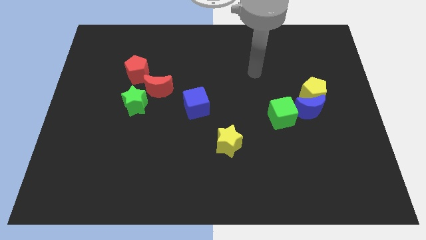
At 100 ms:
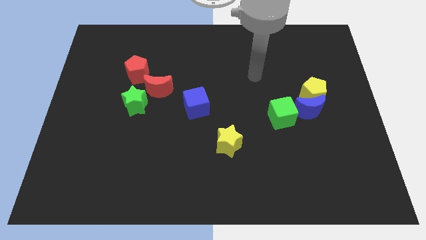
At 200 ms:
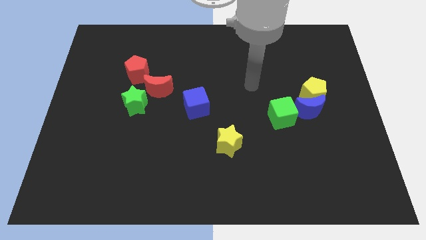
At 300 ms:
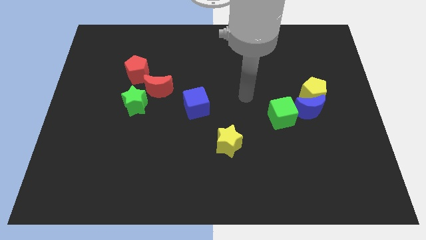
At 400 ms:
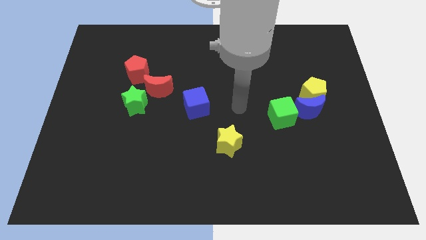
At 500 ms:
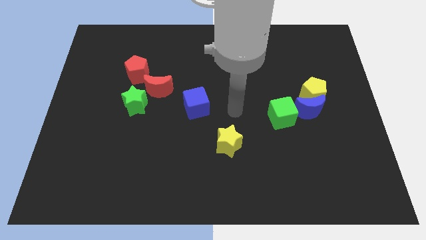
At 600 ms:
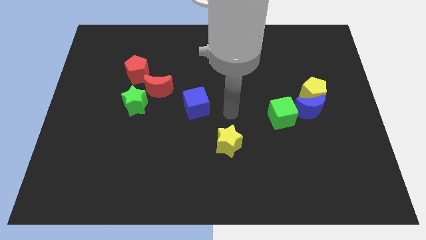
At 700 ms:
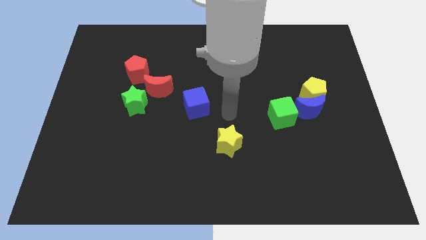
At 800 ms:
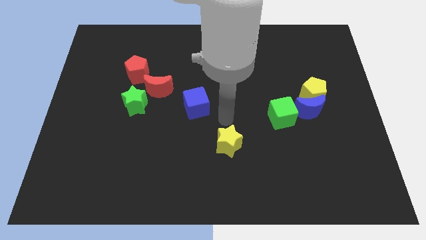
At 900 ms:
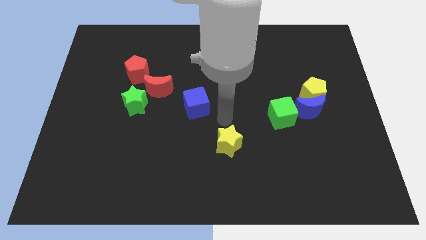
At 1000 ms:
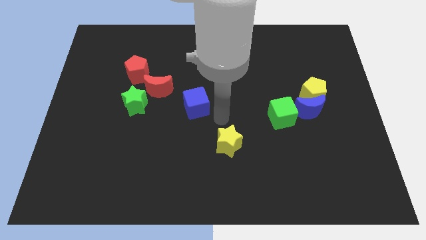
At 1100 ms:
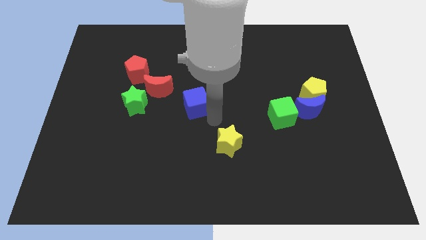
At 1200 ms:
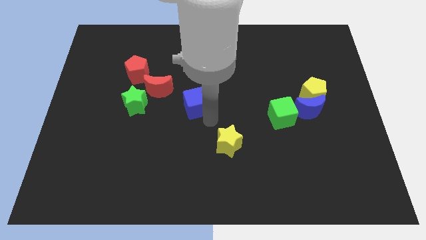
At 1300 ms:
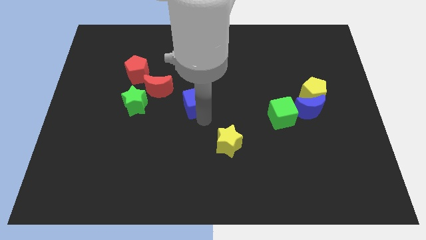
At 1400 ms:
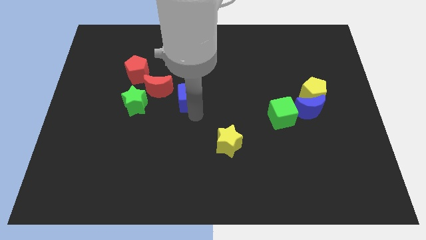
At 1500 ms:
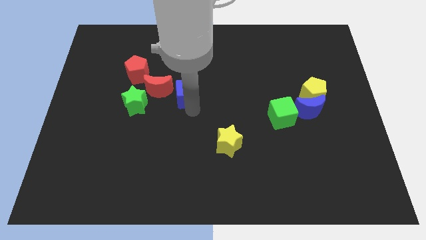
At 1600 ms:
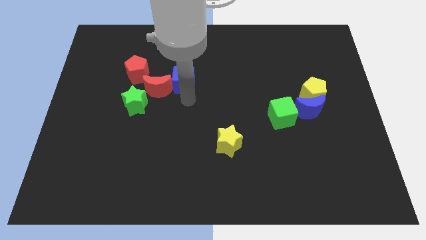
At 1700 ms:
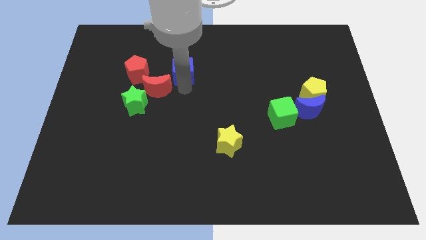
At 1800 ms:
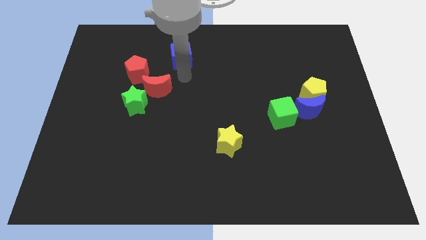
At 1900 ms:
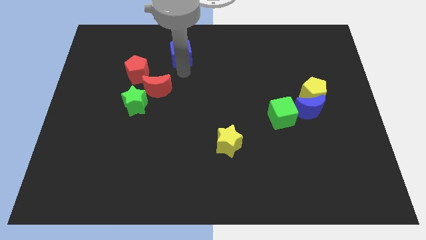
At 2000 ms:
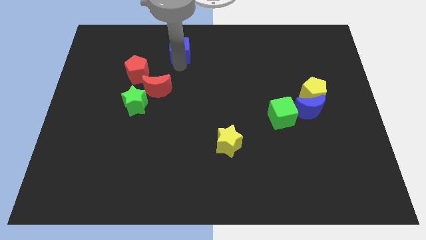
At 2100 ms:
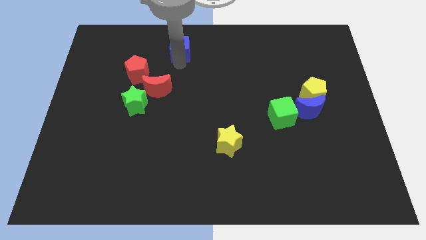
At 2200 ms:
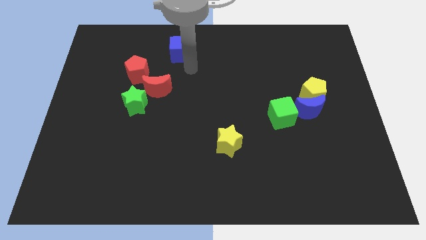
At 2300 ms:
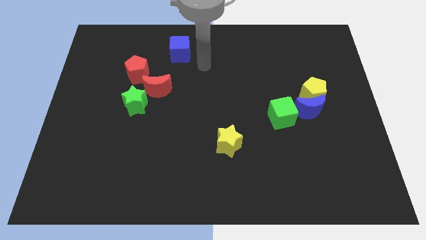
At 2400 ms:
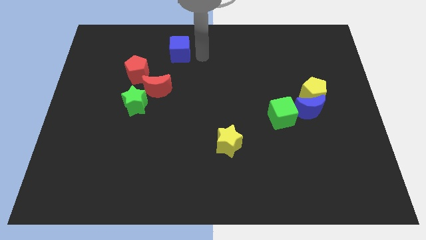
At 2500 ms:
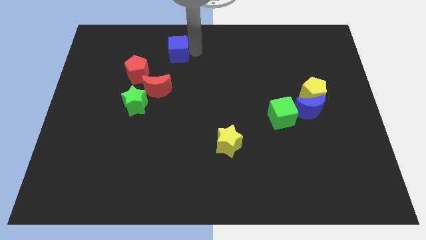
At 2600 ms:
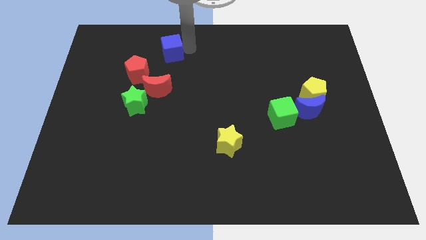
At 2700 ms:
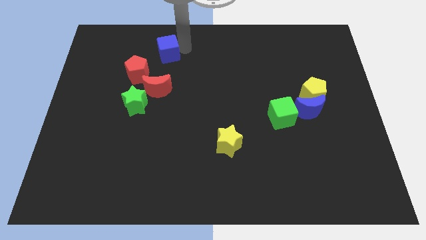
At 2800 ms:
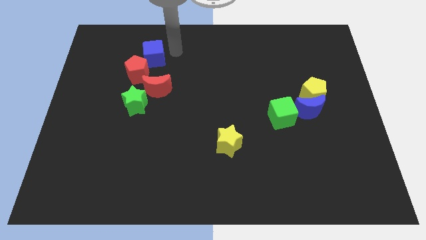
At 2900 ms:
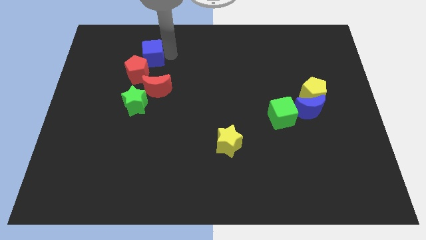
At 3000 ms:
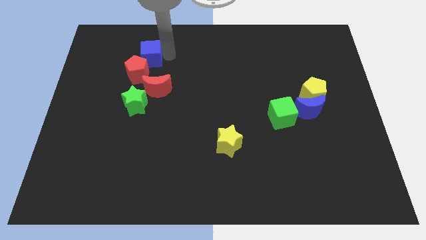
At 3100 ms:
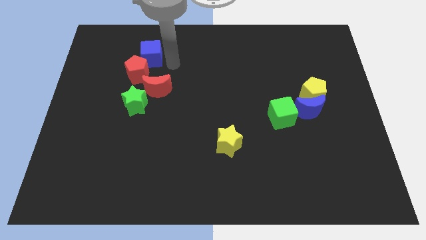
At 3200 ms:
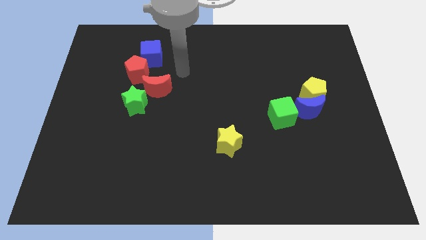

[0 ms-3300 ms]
put the blue cube to the top right of the red pentagon

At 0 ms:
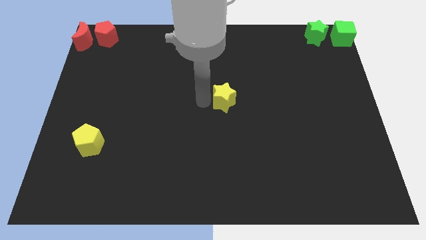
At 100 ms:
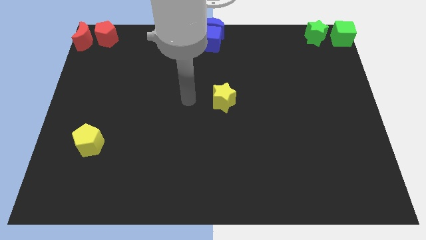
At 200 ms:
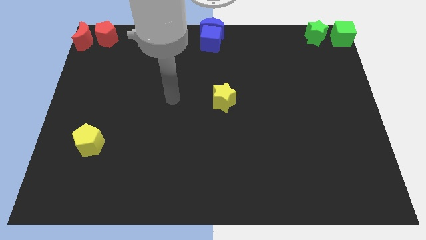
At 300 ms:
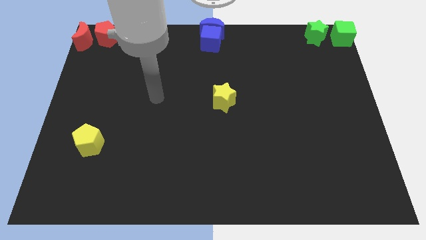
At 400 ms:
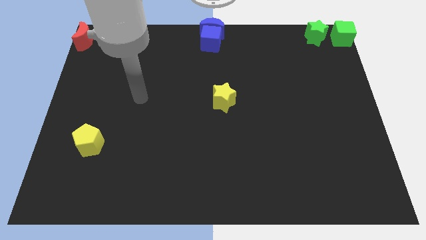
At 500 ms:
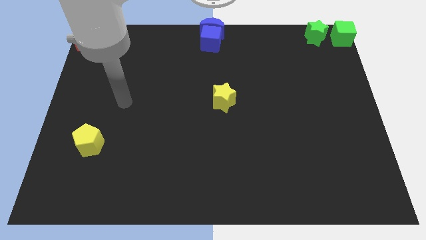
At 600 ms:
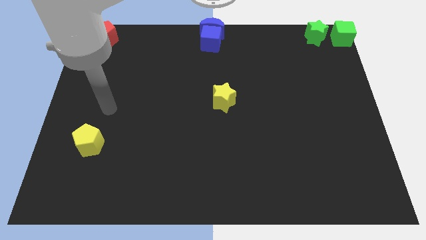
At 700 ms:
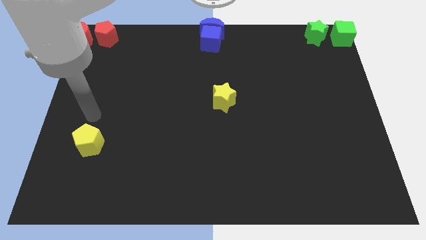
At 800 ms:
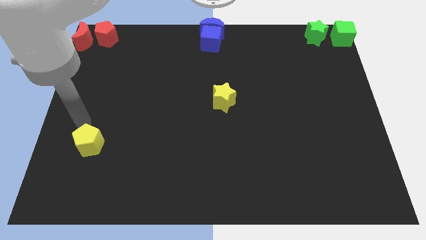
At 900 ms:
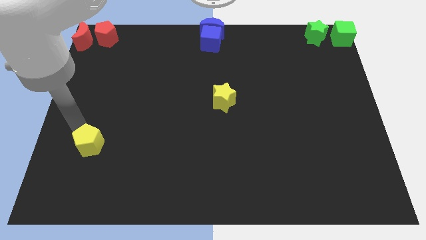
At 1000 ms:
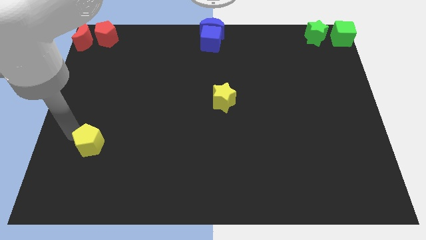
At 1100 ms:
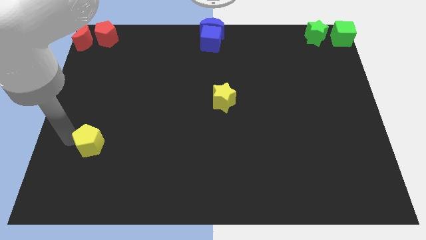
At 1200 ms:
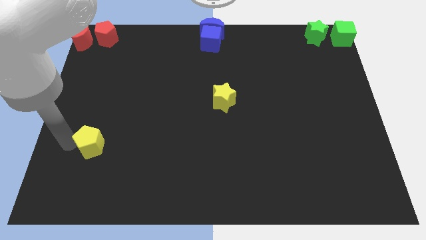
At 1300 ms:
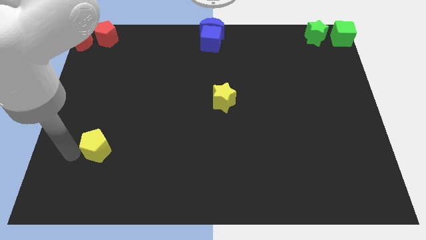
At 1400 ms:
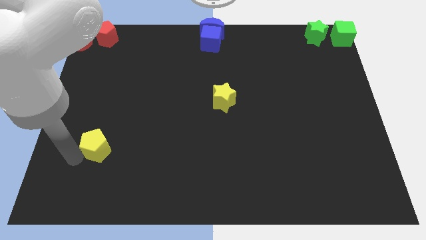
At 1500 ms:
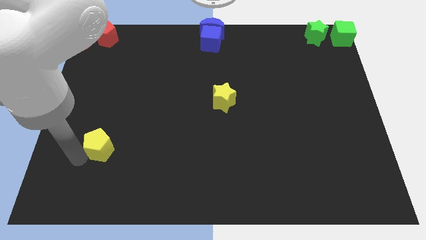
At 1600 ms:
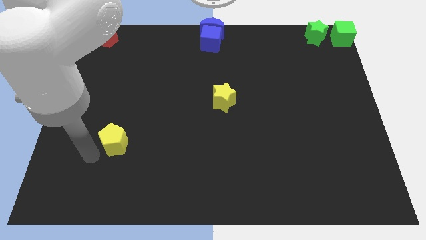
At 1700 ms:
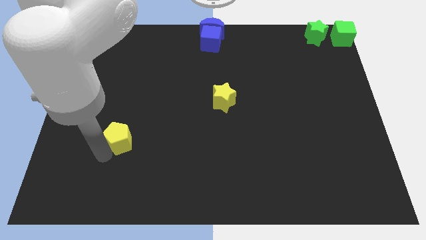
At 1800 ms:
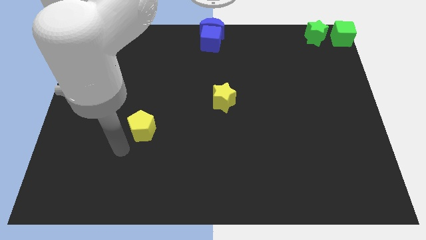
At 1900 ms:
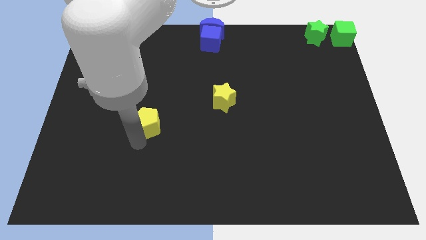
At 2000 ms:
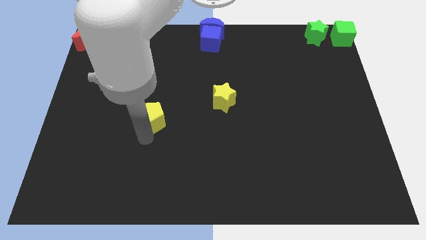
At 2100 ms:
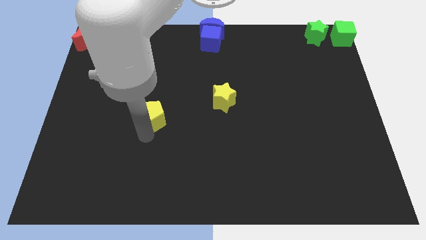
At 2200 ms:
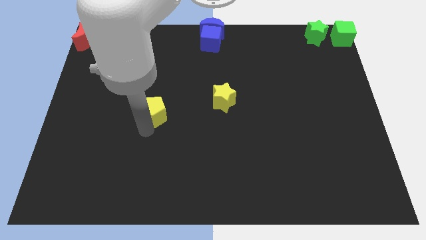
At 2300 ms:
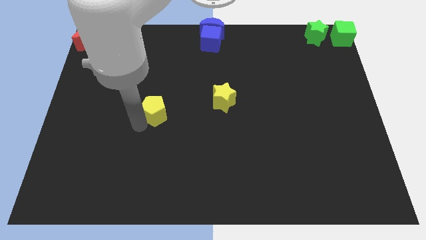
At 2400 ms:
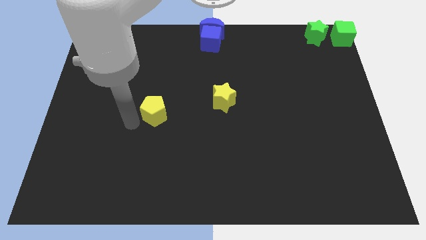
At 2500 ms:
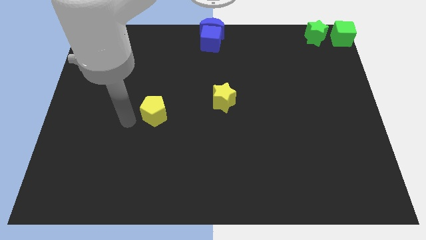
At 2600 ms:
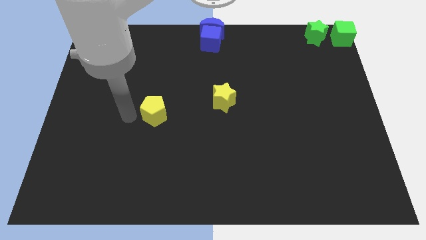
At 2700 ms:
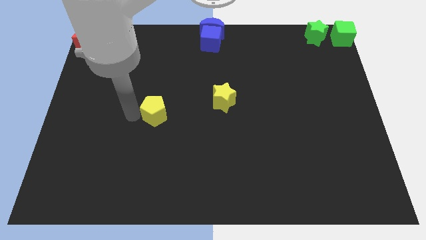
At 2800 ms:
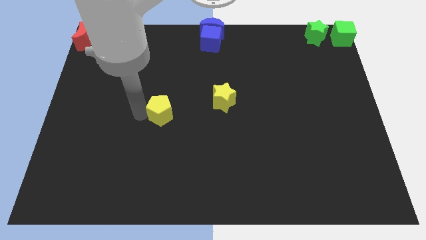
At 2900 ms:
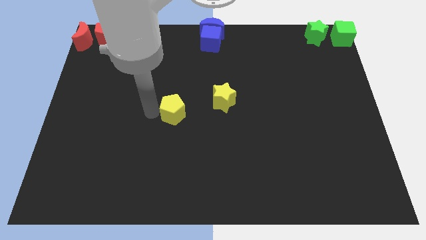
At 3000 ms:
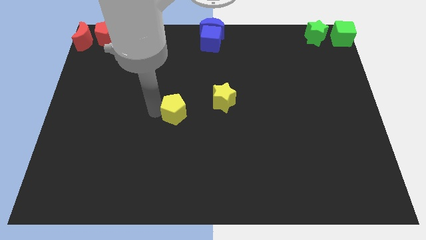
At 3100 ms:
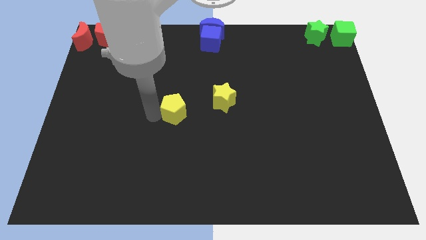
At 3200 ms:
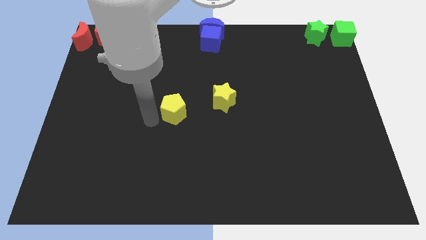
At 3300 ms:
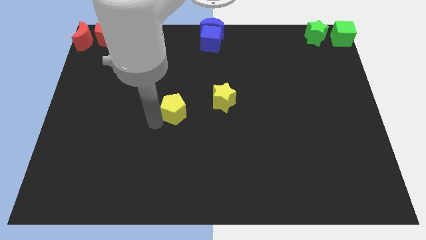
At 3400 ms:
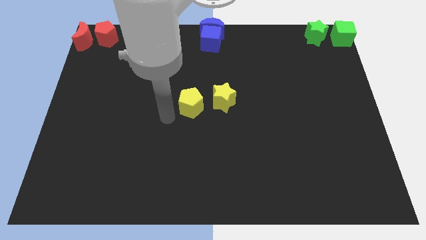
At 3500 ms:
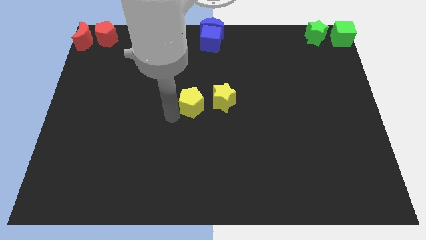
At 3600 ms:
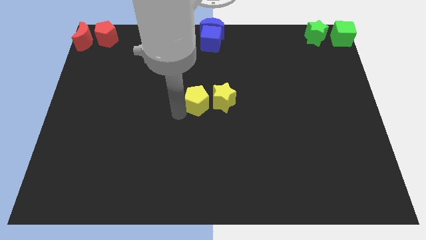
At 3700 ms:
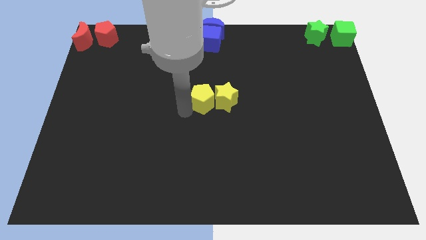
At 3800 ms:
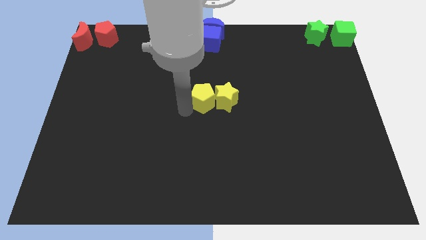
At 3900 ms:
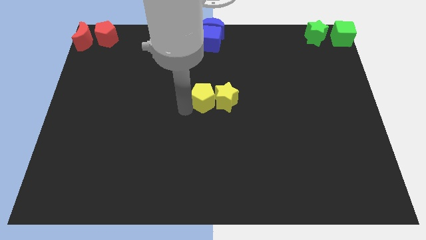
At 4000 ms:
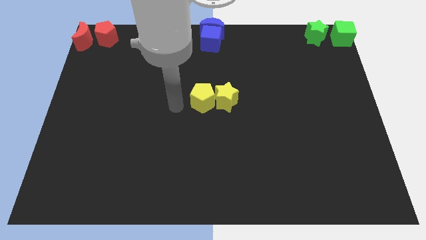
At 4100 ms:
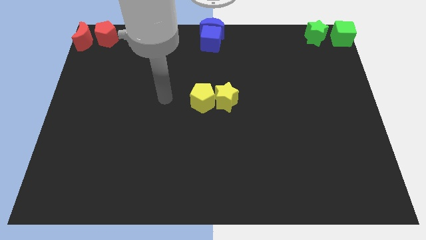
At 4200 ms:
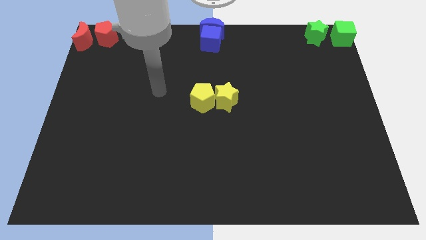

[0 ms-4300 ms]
push the yellow pentagon to the left of the yellow star

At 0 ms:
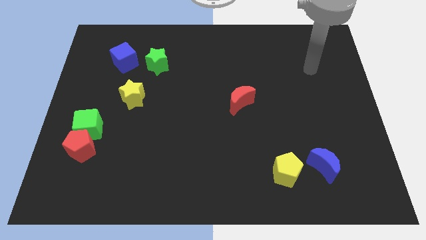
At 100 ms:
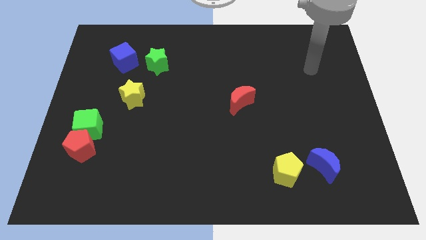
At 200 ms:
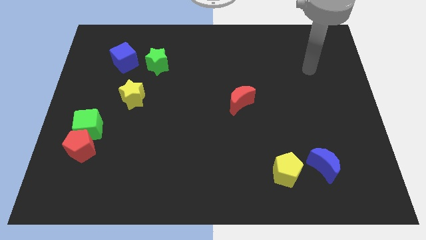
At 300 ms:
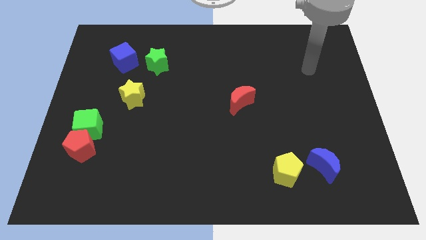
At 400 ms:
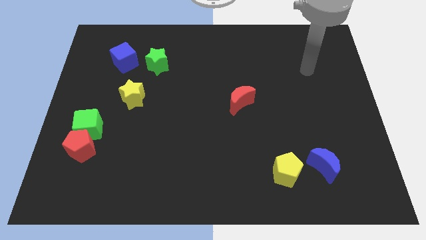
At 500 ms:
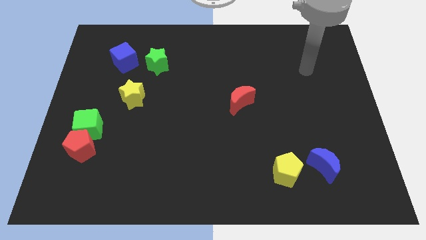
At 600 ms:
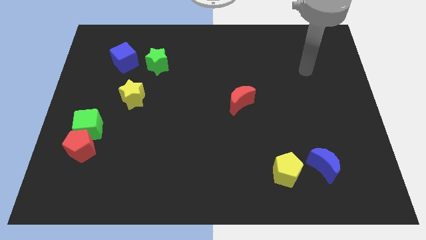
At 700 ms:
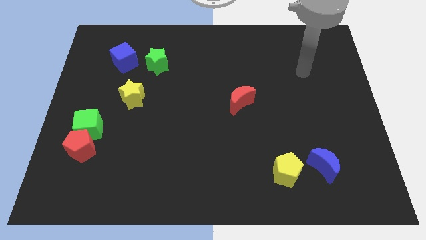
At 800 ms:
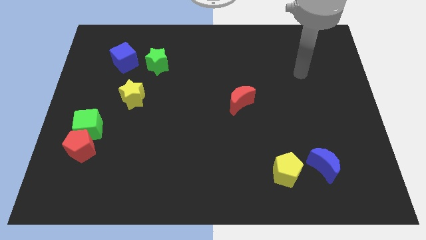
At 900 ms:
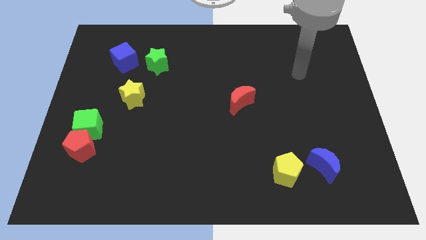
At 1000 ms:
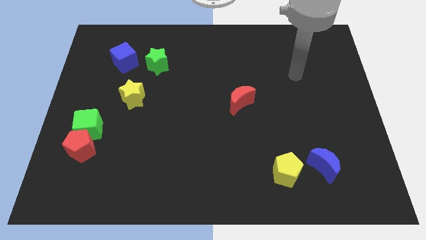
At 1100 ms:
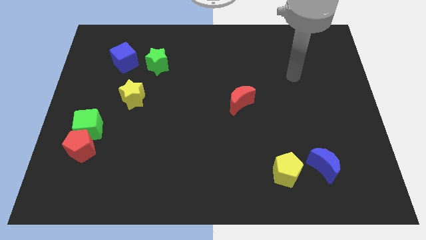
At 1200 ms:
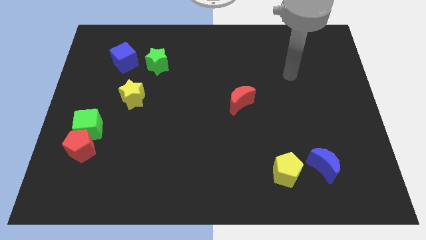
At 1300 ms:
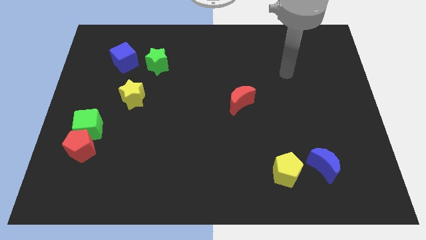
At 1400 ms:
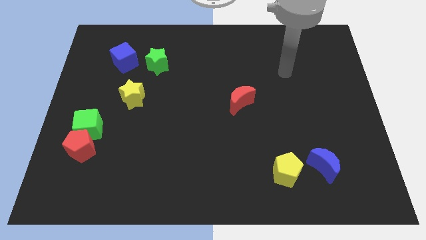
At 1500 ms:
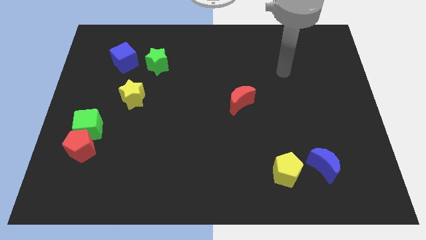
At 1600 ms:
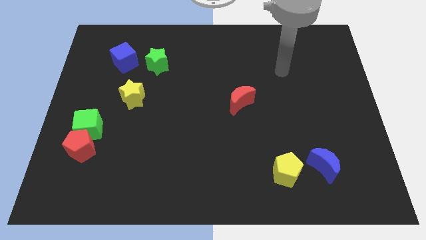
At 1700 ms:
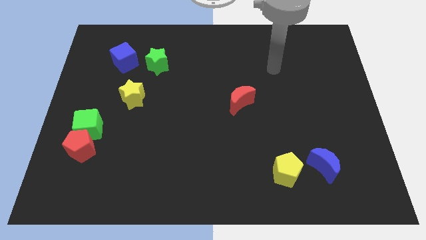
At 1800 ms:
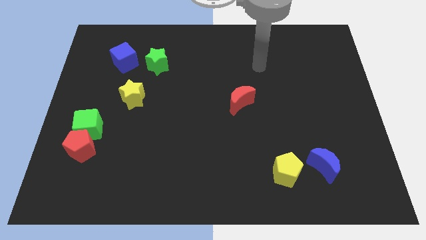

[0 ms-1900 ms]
move the arm towards the red crescent
